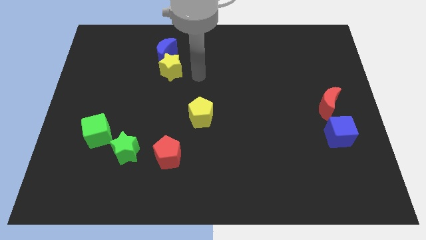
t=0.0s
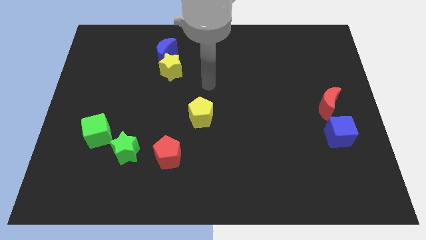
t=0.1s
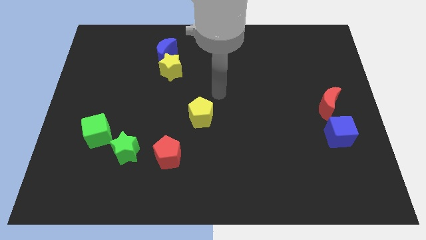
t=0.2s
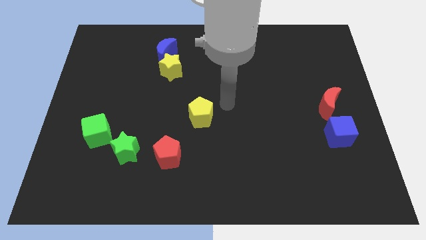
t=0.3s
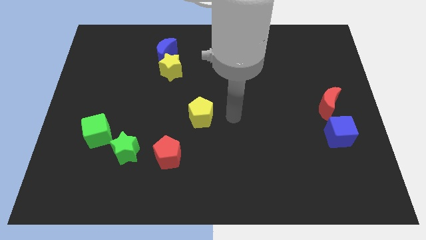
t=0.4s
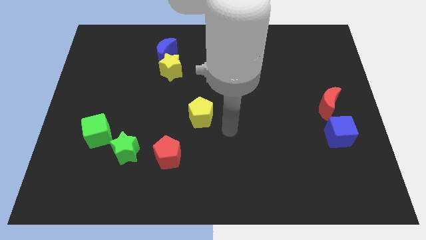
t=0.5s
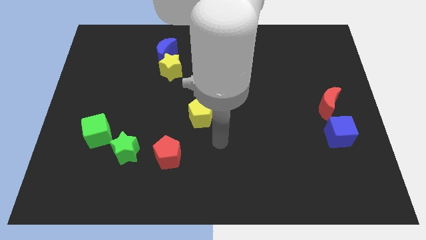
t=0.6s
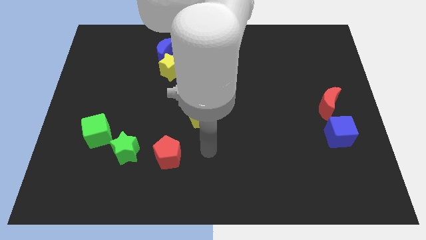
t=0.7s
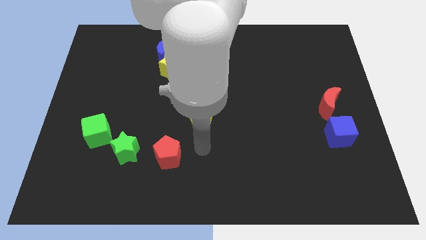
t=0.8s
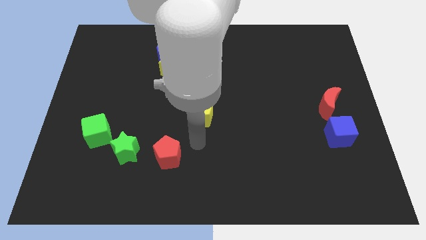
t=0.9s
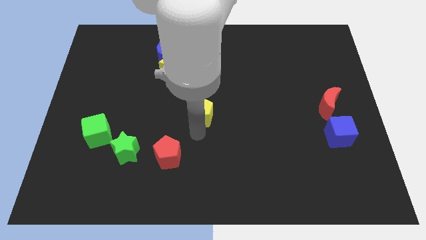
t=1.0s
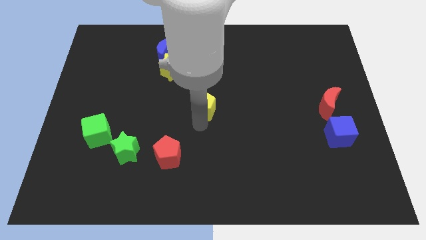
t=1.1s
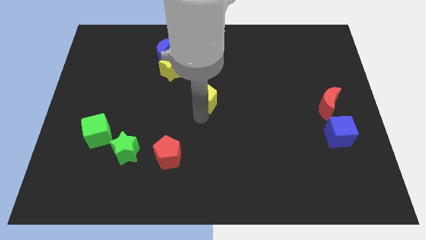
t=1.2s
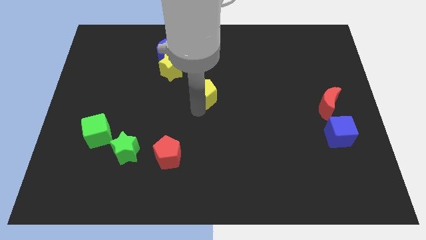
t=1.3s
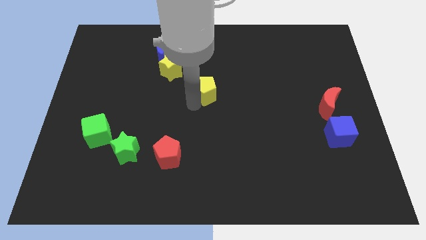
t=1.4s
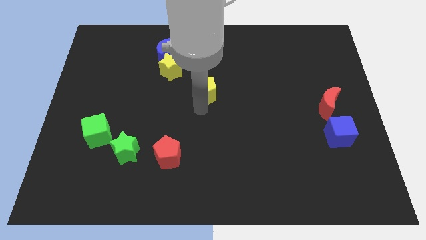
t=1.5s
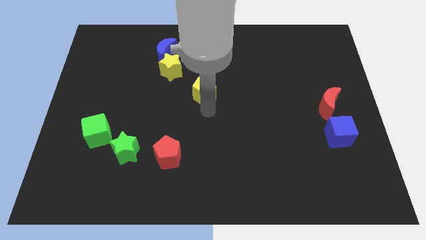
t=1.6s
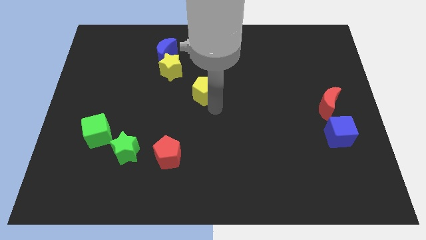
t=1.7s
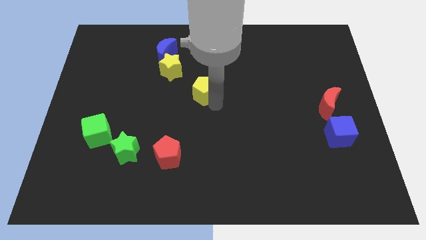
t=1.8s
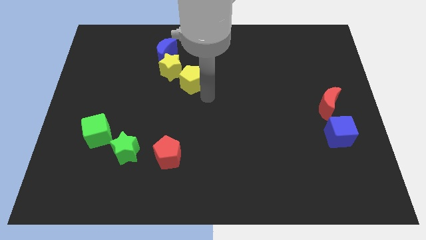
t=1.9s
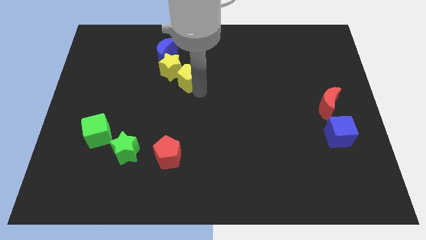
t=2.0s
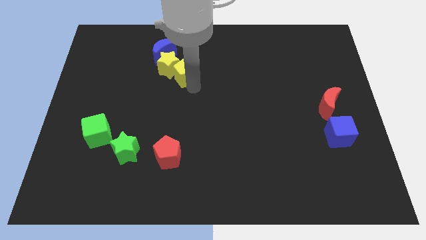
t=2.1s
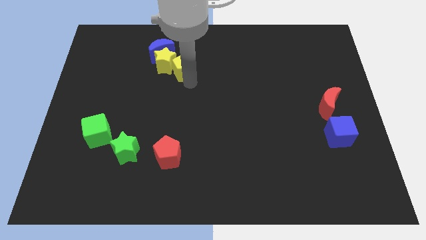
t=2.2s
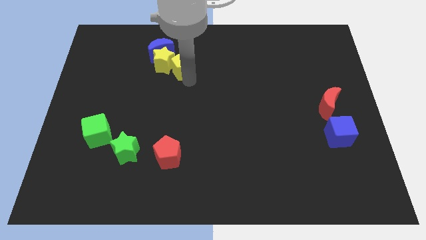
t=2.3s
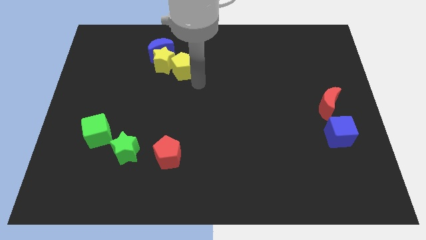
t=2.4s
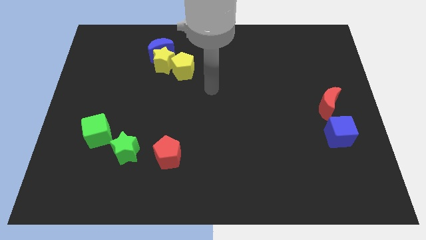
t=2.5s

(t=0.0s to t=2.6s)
move the yellow pentagon to the right of the yellow star

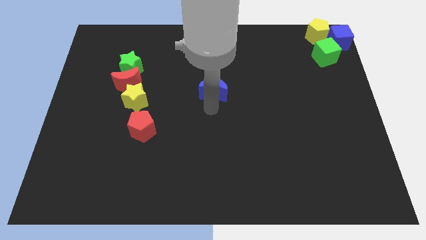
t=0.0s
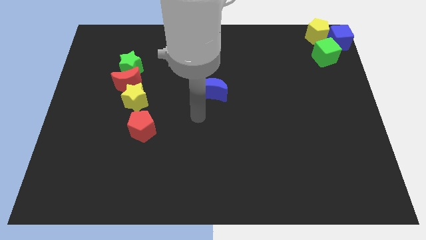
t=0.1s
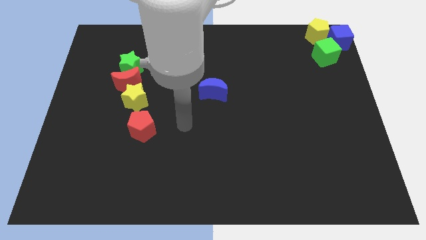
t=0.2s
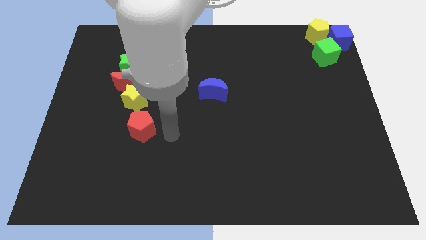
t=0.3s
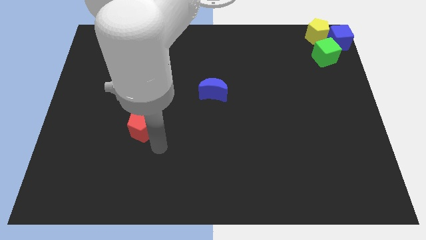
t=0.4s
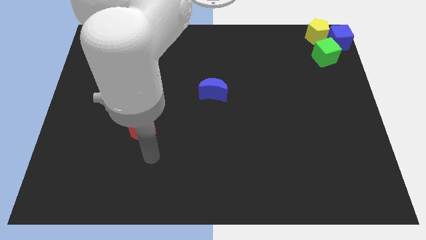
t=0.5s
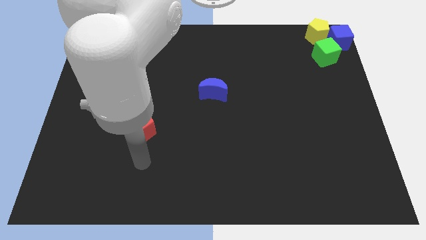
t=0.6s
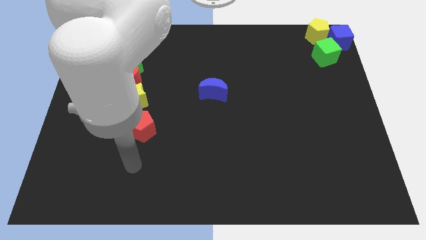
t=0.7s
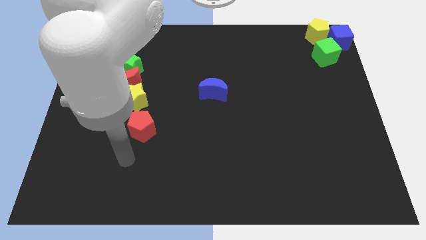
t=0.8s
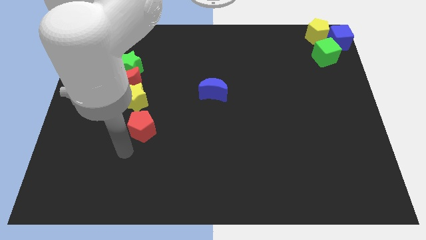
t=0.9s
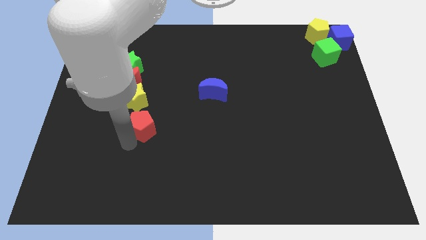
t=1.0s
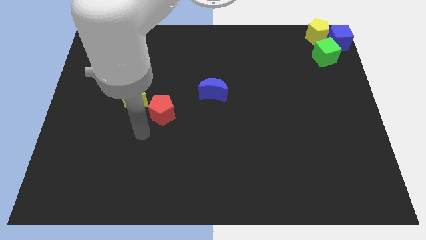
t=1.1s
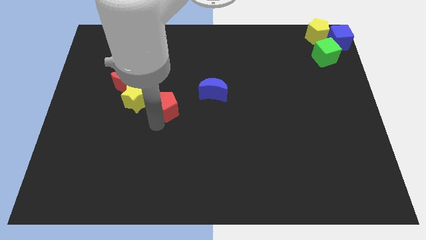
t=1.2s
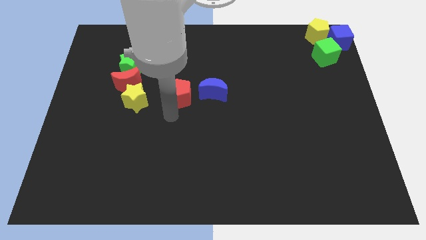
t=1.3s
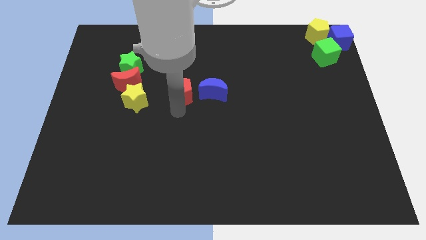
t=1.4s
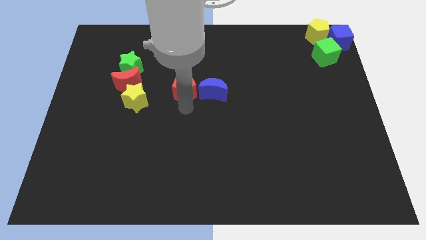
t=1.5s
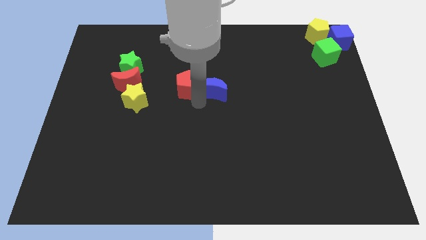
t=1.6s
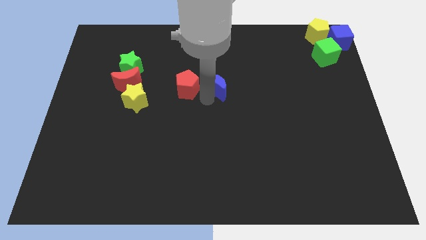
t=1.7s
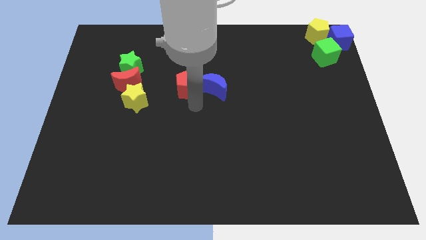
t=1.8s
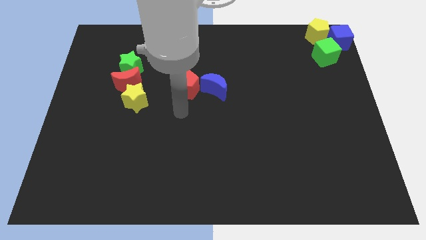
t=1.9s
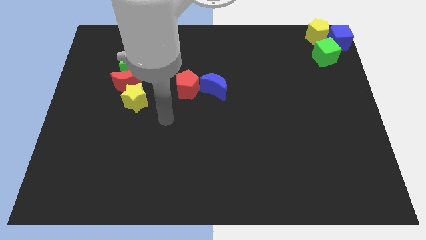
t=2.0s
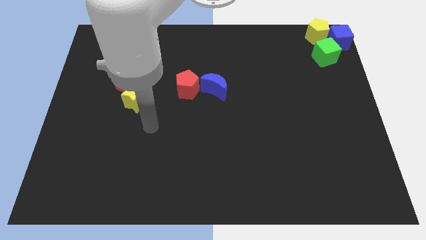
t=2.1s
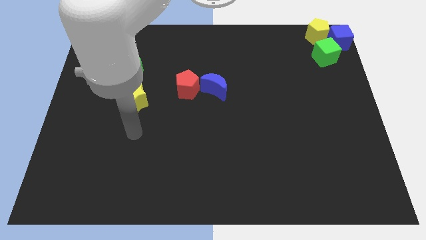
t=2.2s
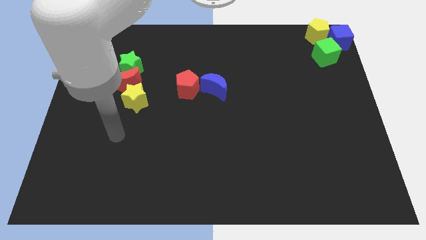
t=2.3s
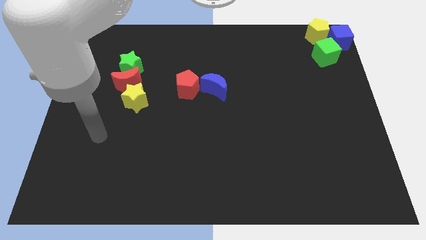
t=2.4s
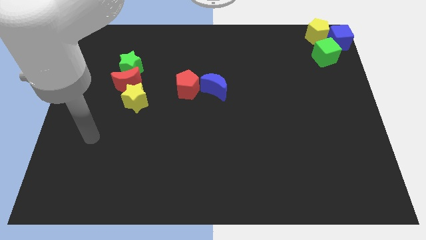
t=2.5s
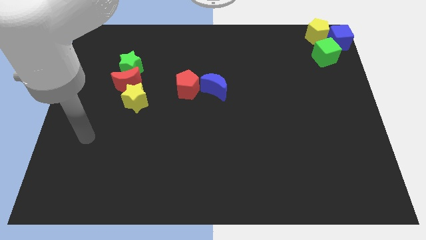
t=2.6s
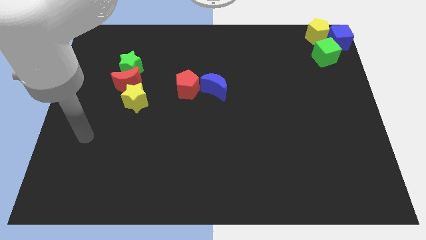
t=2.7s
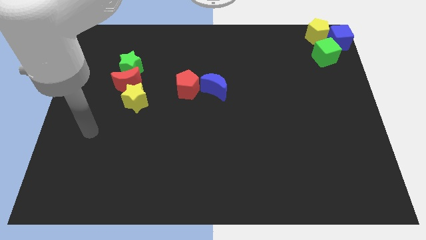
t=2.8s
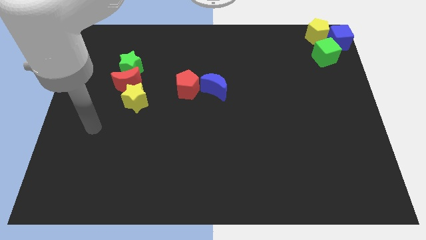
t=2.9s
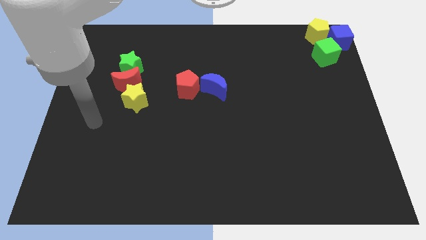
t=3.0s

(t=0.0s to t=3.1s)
move the red pentagon left to the blue crescent

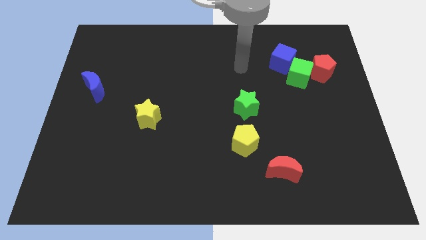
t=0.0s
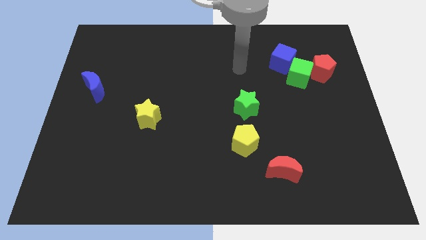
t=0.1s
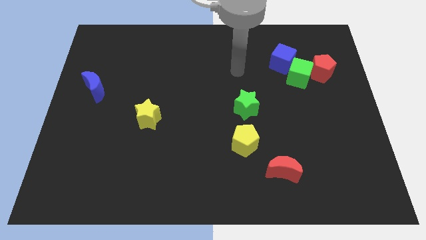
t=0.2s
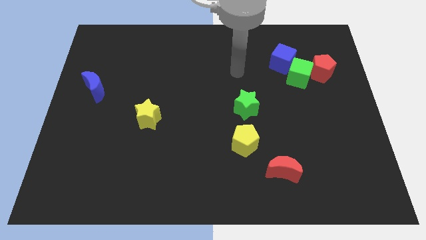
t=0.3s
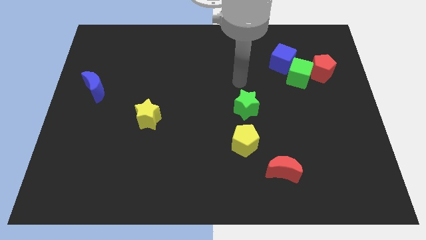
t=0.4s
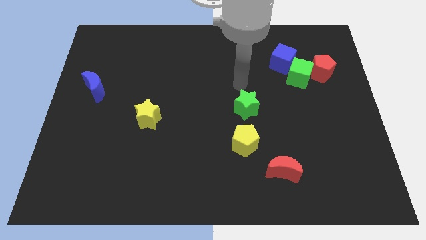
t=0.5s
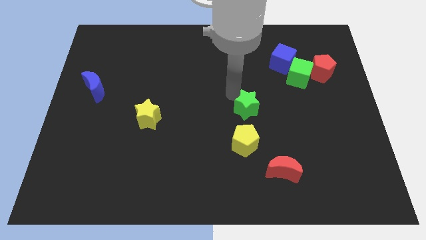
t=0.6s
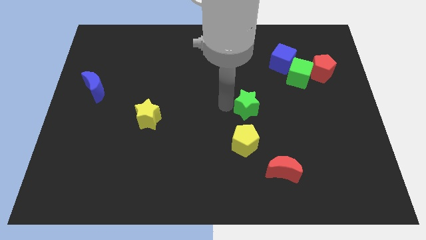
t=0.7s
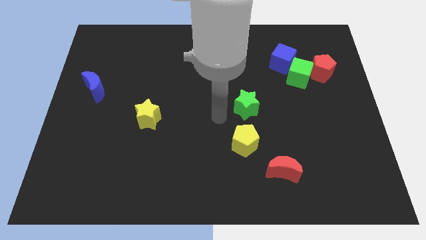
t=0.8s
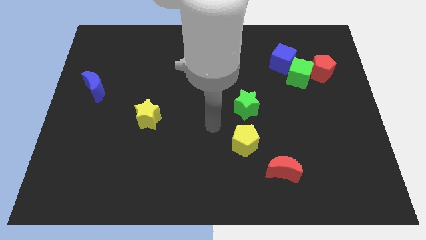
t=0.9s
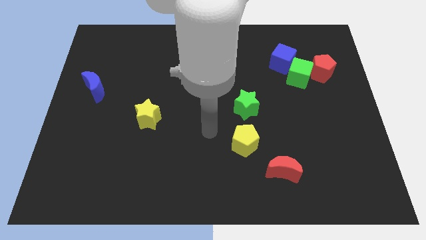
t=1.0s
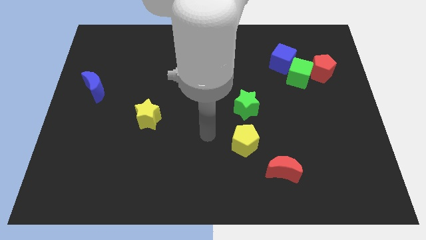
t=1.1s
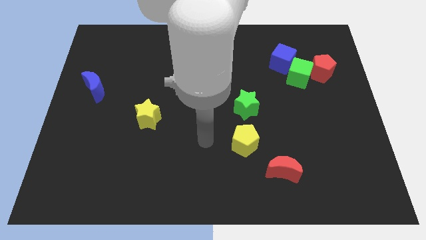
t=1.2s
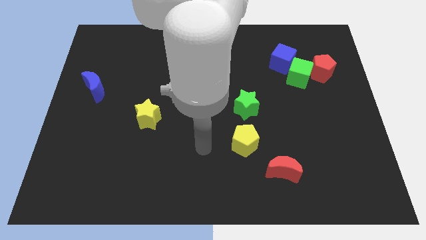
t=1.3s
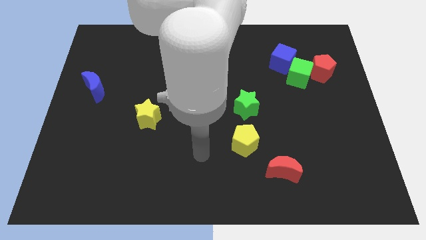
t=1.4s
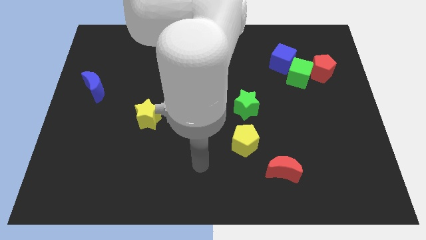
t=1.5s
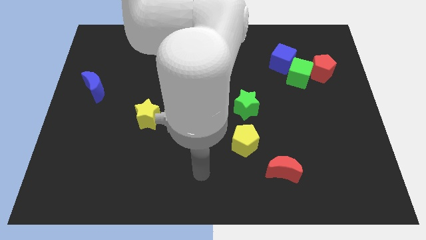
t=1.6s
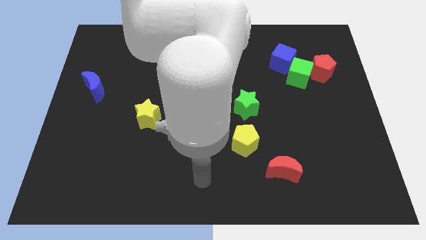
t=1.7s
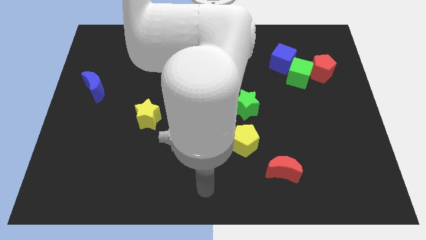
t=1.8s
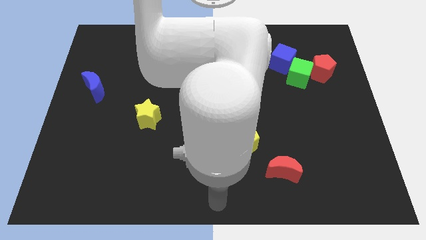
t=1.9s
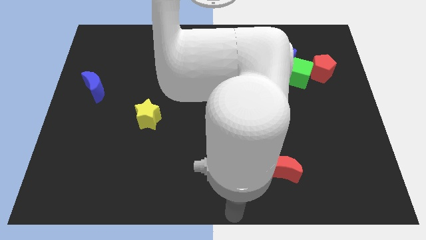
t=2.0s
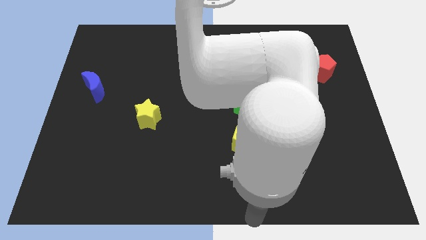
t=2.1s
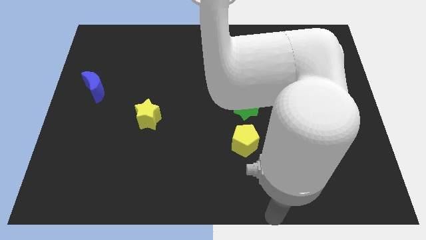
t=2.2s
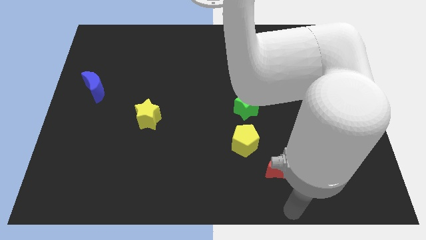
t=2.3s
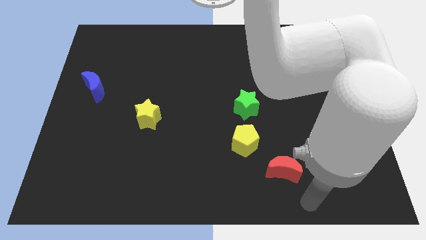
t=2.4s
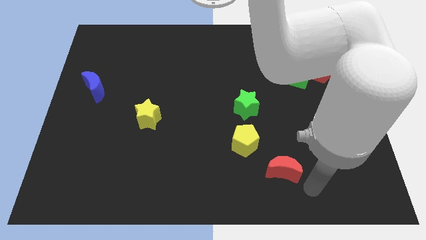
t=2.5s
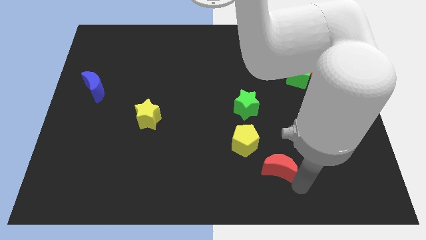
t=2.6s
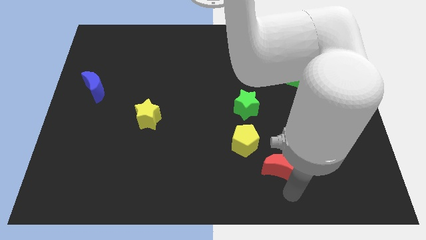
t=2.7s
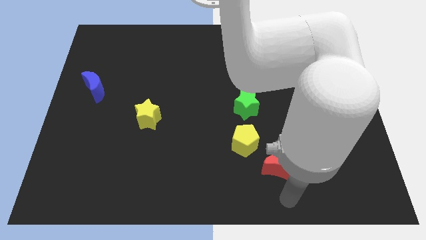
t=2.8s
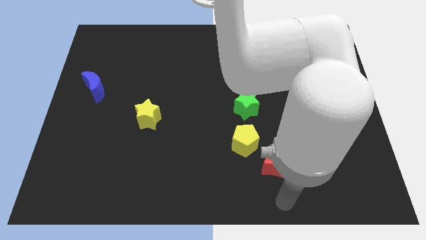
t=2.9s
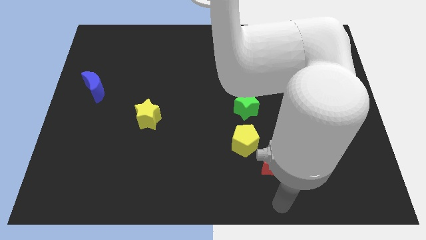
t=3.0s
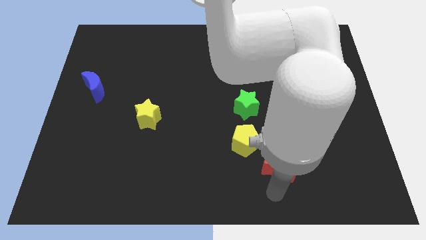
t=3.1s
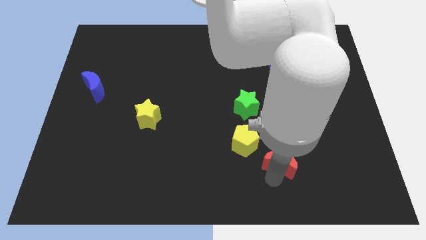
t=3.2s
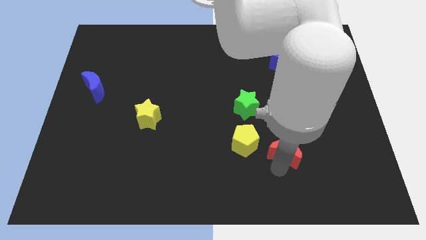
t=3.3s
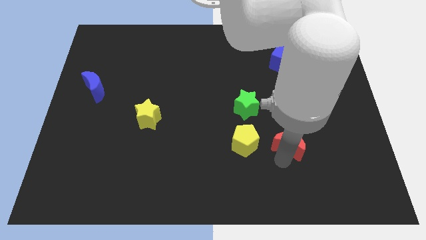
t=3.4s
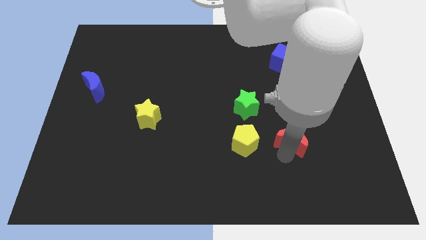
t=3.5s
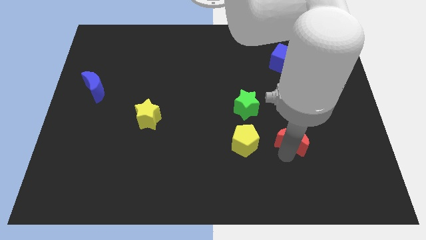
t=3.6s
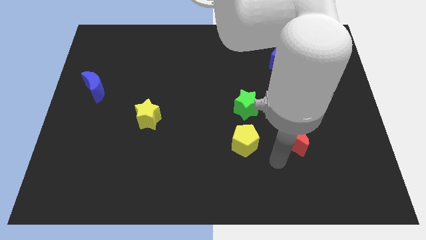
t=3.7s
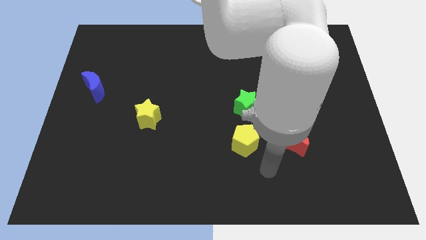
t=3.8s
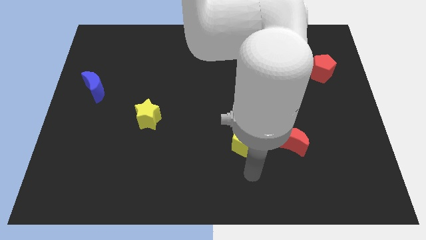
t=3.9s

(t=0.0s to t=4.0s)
place the red crescent to the right of the yellow pentagon
